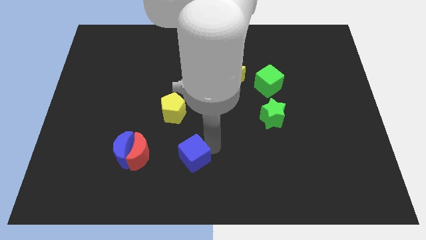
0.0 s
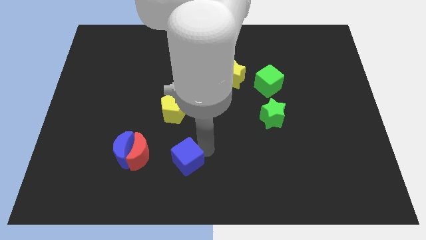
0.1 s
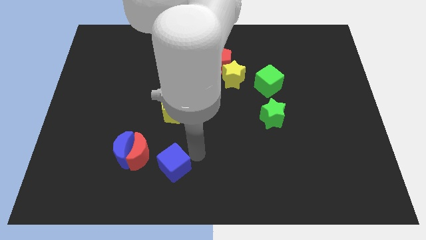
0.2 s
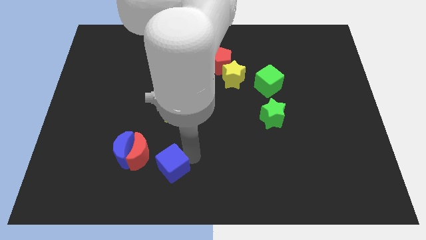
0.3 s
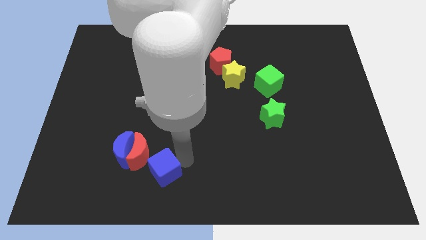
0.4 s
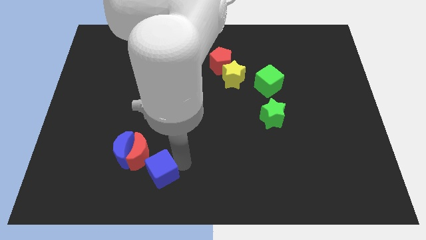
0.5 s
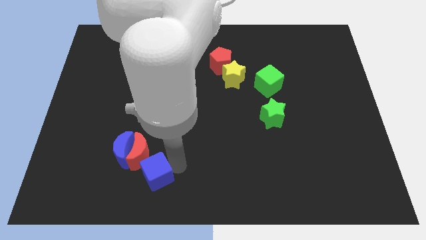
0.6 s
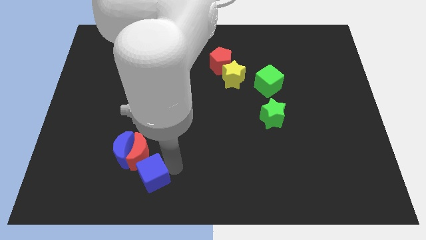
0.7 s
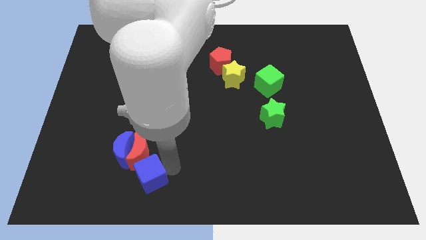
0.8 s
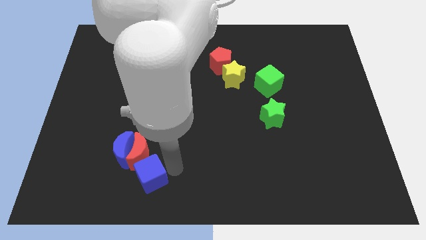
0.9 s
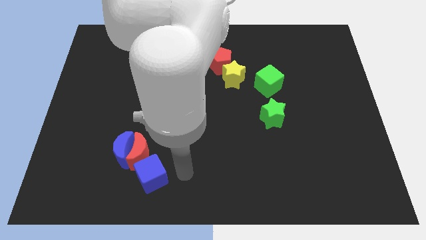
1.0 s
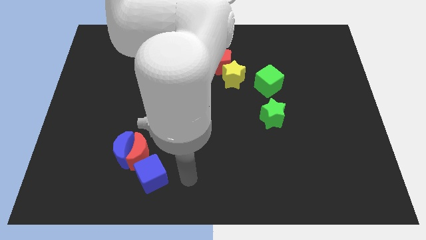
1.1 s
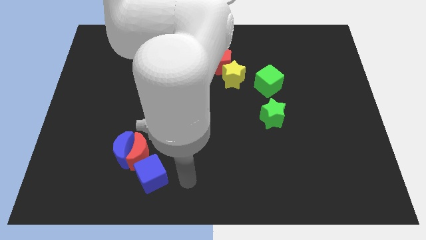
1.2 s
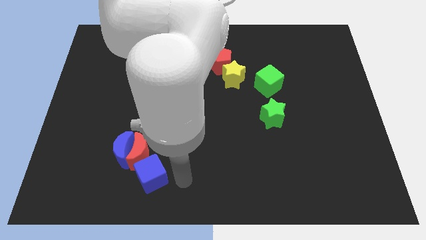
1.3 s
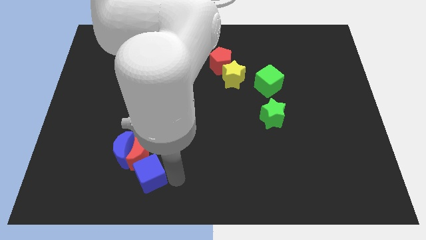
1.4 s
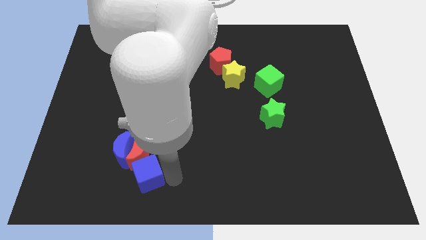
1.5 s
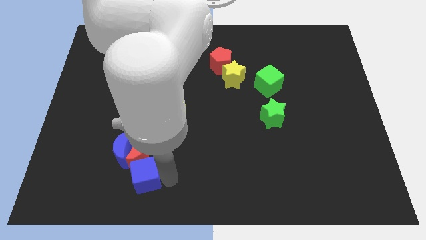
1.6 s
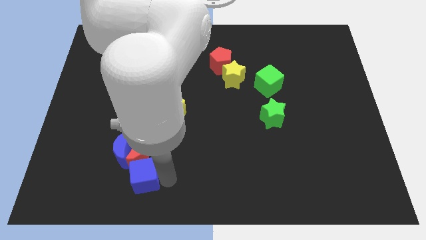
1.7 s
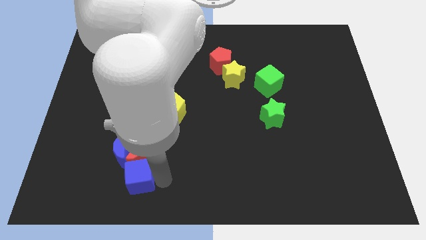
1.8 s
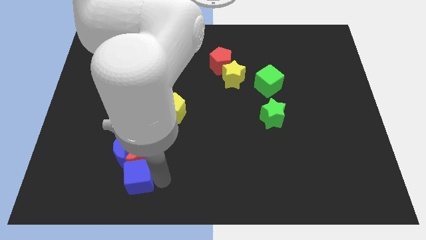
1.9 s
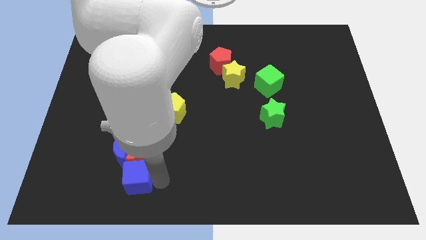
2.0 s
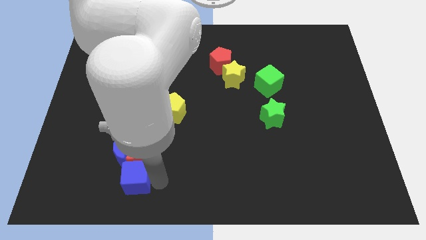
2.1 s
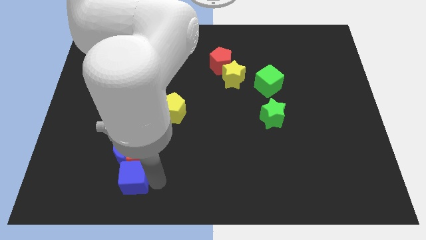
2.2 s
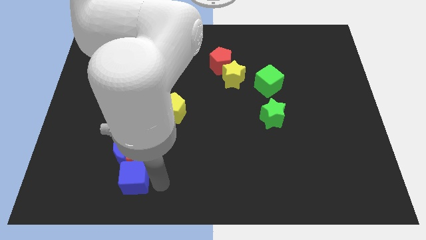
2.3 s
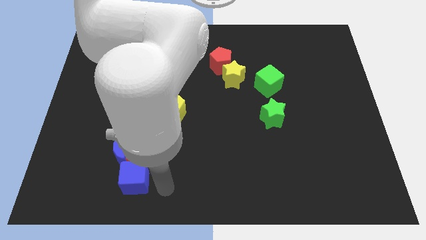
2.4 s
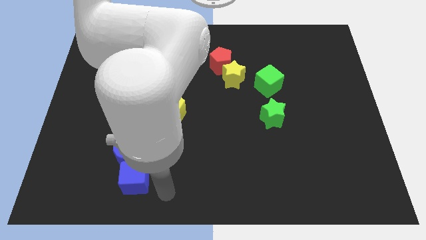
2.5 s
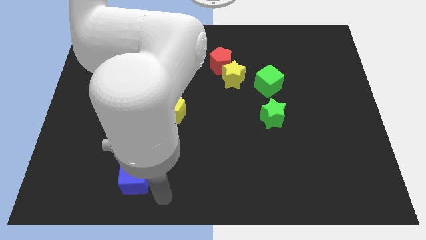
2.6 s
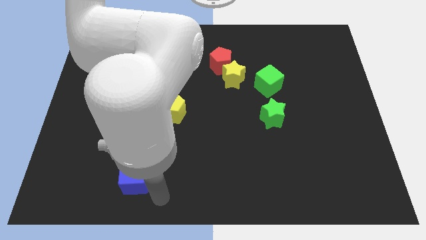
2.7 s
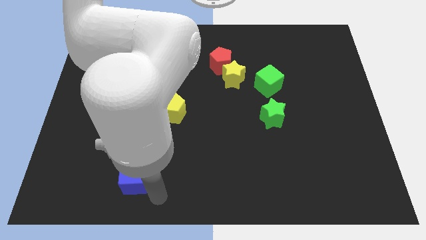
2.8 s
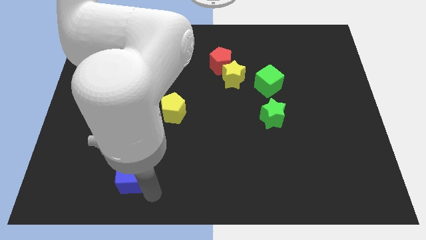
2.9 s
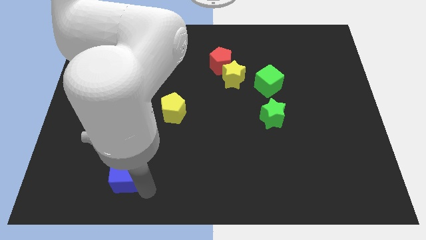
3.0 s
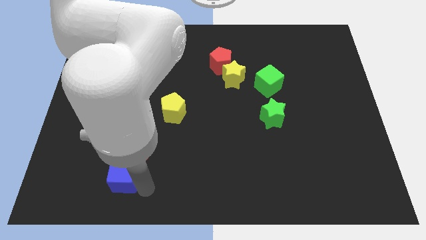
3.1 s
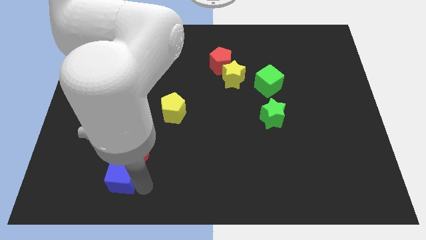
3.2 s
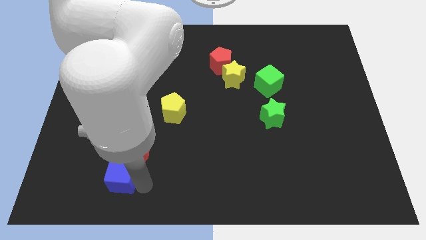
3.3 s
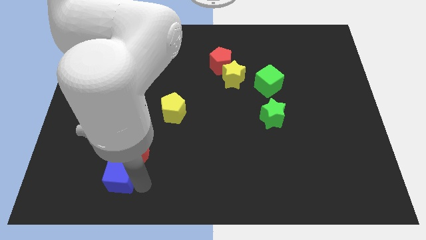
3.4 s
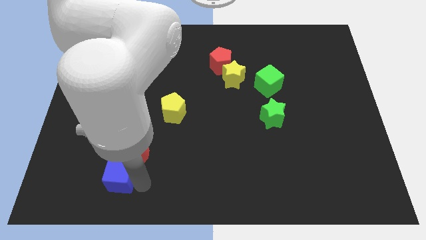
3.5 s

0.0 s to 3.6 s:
move the blue cube below to the blue moon and red moon

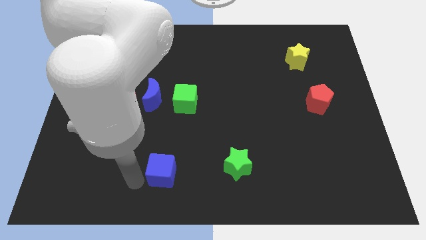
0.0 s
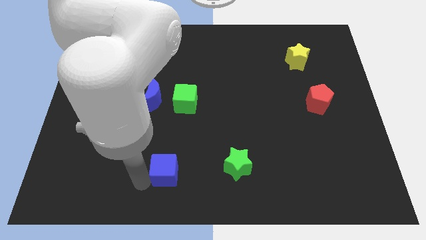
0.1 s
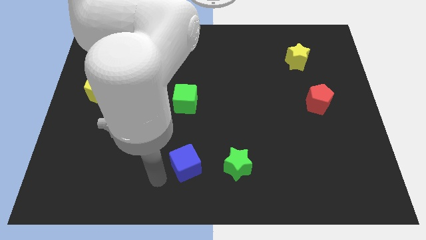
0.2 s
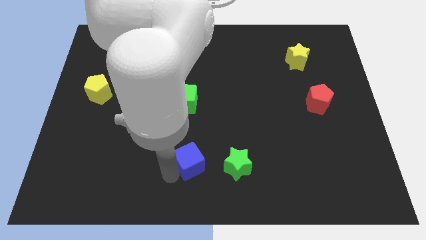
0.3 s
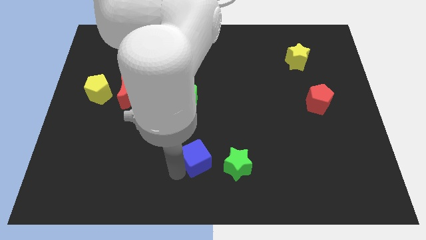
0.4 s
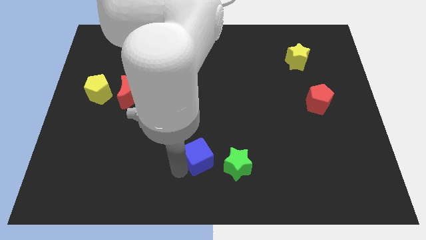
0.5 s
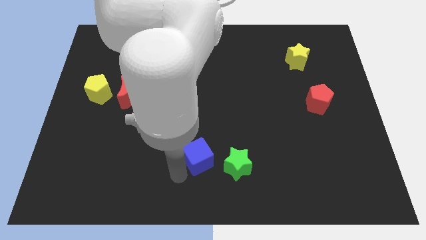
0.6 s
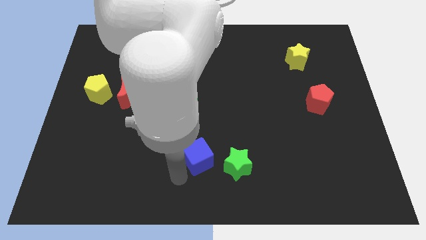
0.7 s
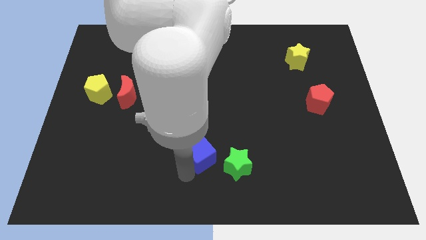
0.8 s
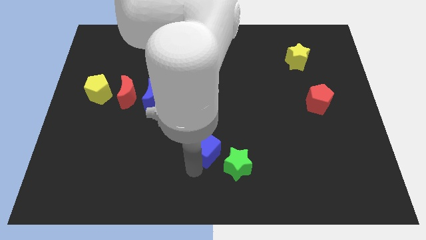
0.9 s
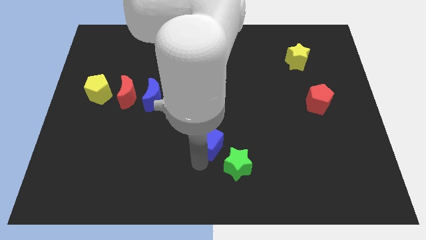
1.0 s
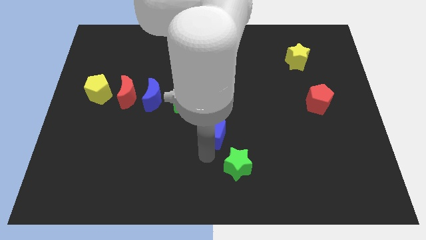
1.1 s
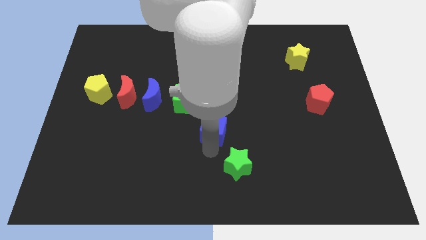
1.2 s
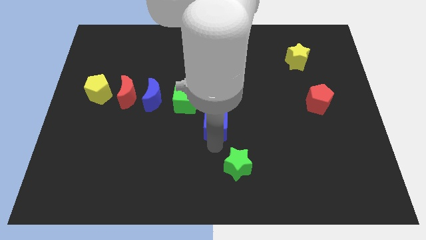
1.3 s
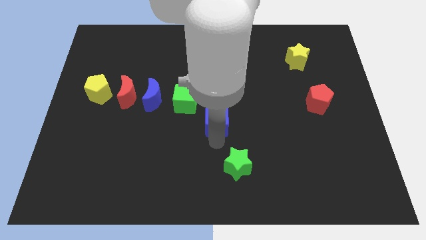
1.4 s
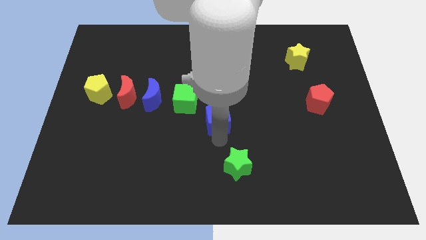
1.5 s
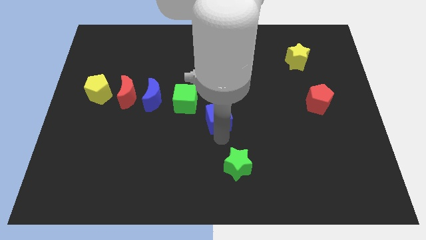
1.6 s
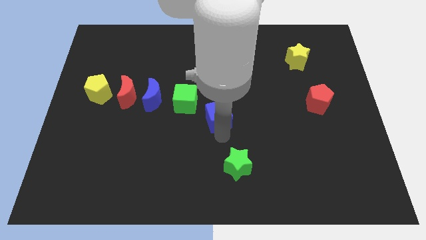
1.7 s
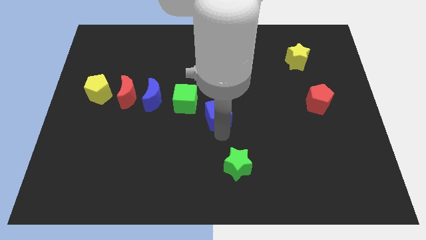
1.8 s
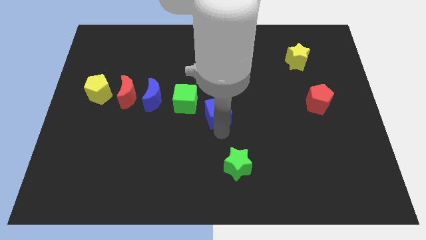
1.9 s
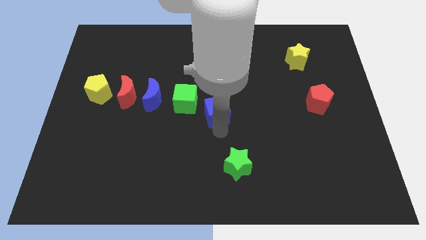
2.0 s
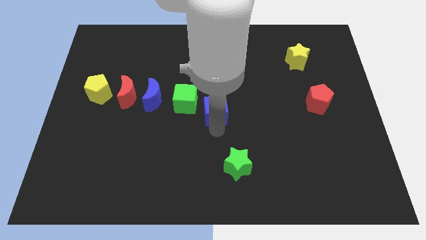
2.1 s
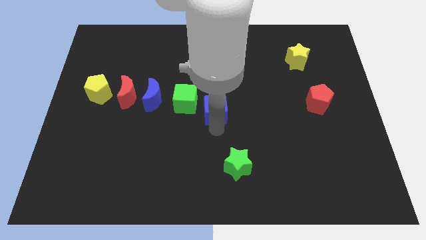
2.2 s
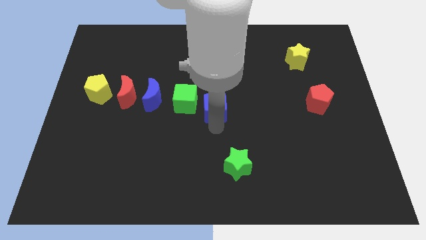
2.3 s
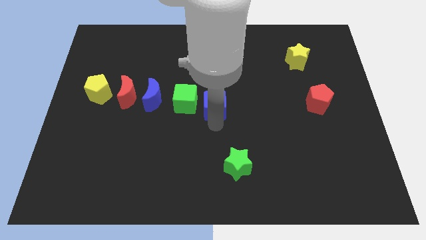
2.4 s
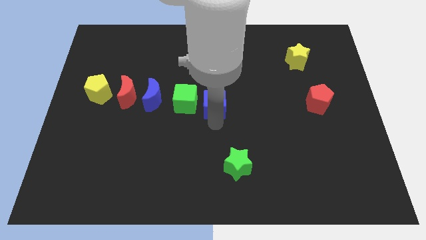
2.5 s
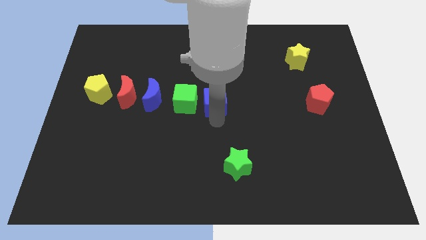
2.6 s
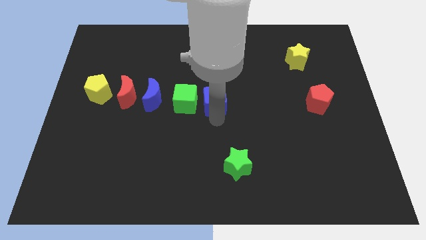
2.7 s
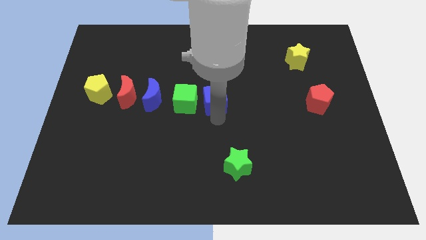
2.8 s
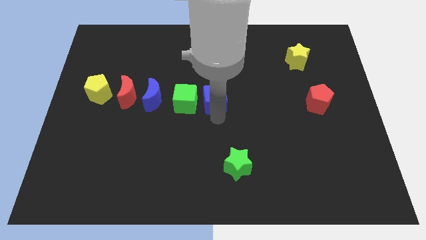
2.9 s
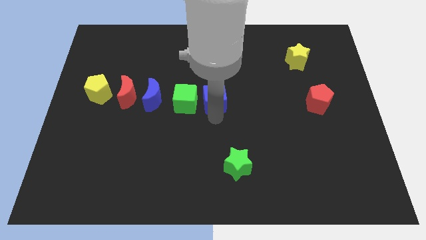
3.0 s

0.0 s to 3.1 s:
place the blue cube to the right of green cube

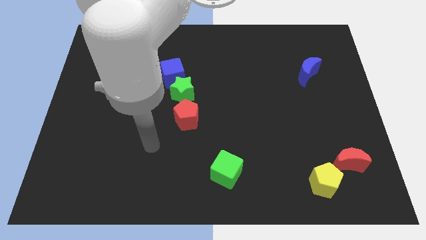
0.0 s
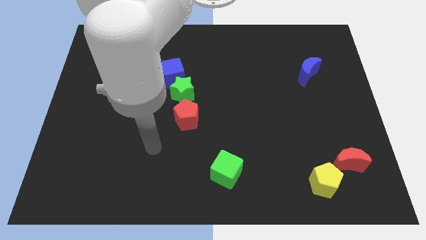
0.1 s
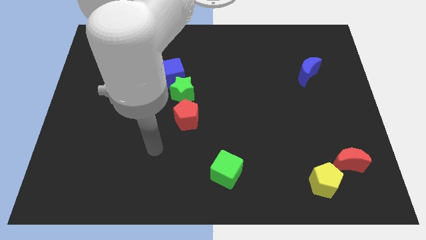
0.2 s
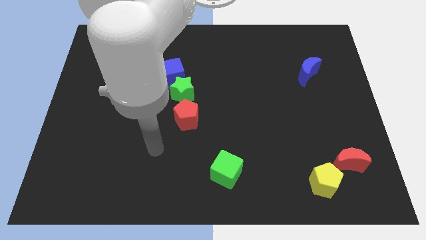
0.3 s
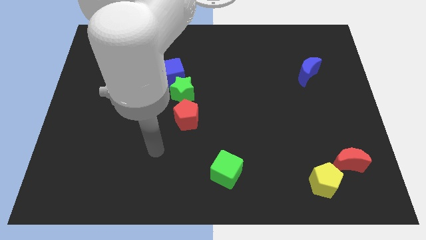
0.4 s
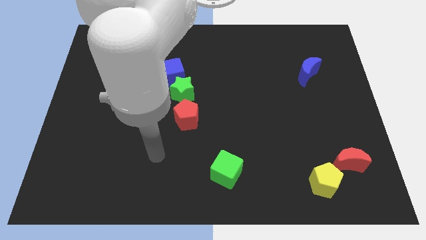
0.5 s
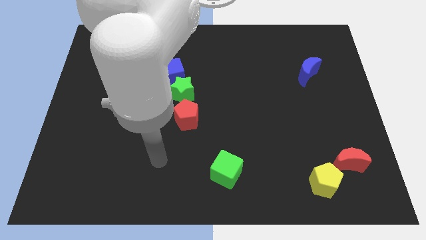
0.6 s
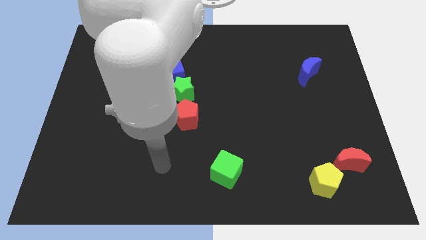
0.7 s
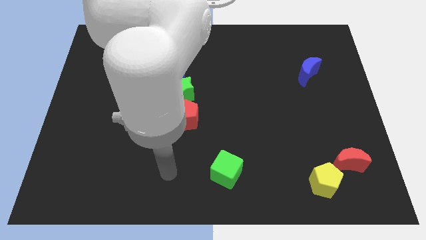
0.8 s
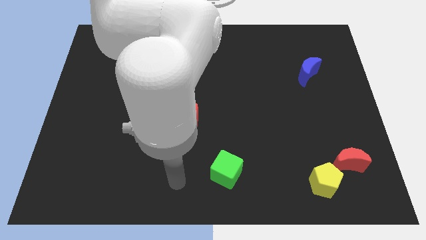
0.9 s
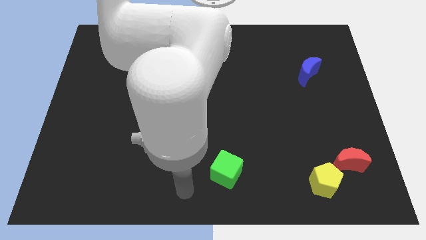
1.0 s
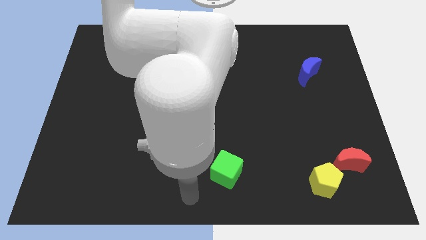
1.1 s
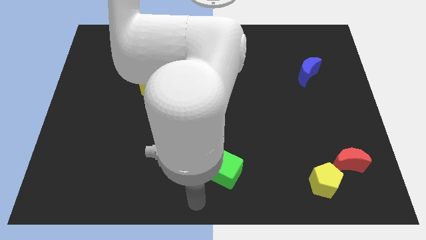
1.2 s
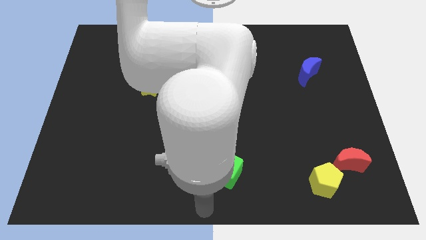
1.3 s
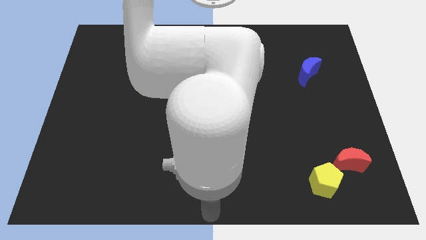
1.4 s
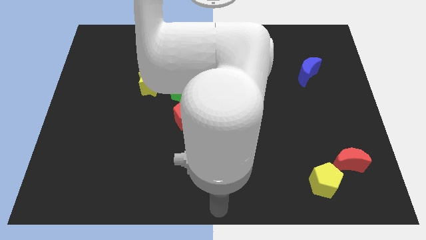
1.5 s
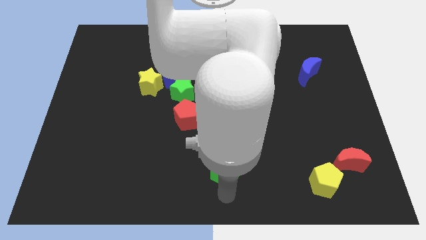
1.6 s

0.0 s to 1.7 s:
point your hand below the green cube

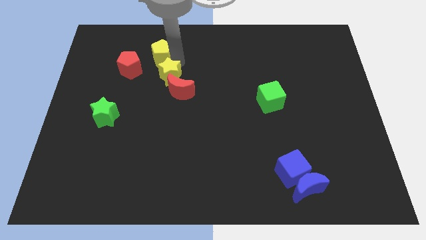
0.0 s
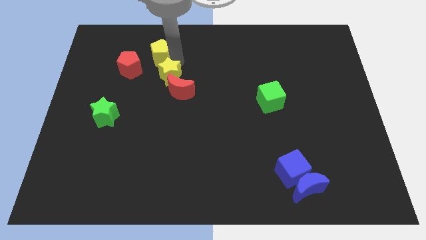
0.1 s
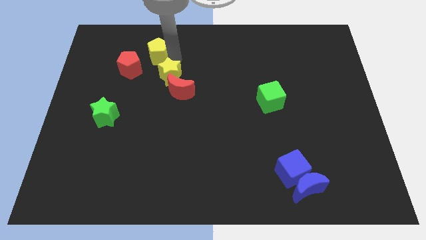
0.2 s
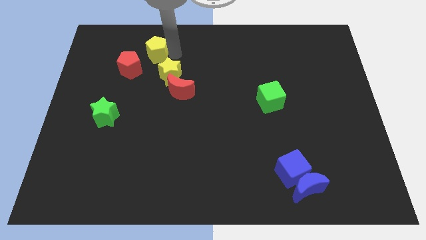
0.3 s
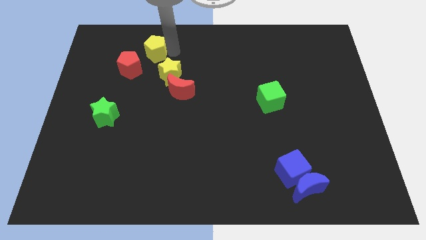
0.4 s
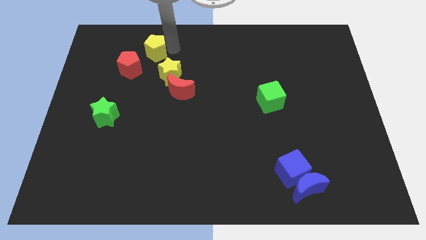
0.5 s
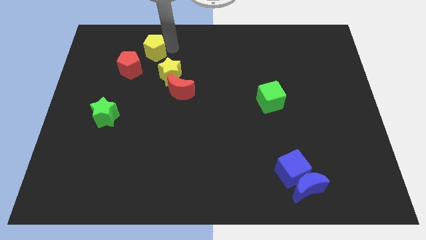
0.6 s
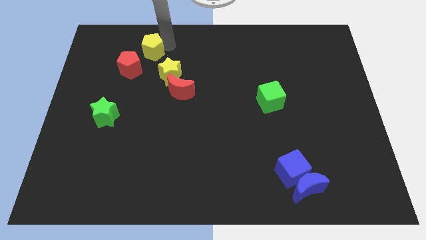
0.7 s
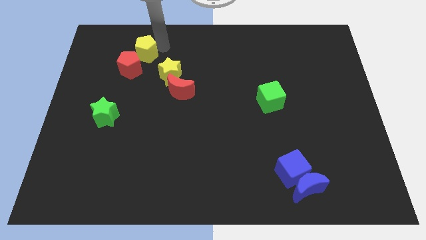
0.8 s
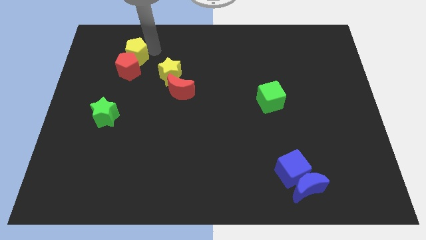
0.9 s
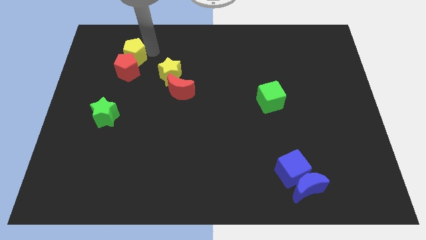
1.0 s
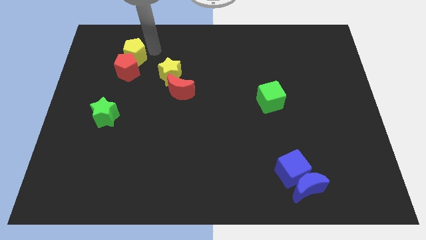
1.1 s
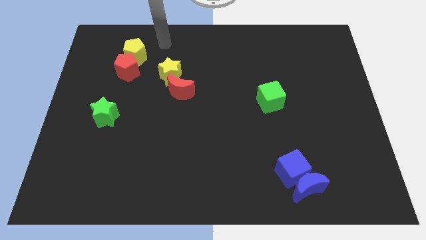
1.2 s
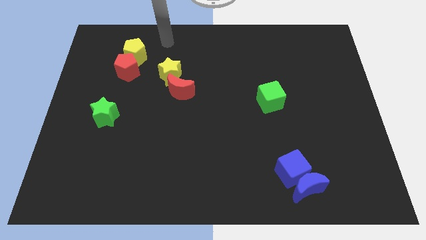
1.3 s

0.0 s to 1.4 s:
move the yellow pentagon above the red pentagon
